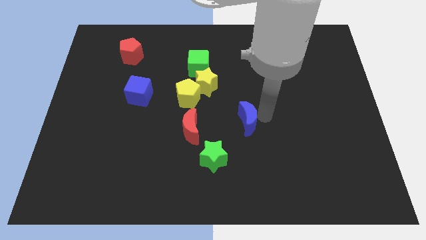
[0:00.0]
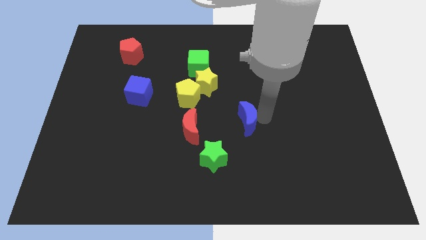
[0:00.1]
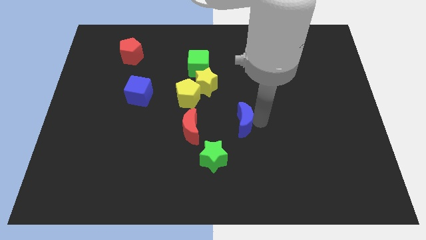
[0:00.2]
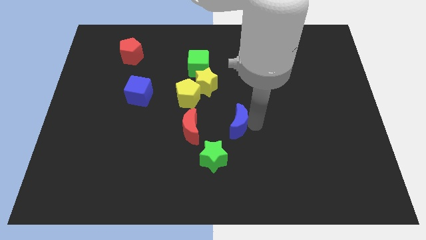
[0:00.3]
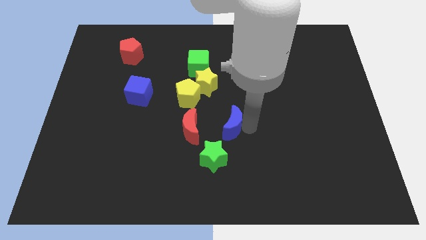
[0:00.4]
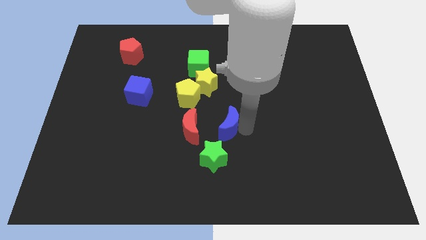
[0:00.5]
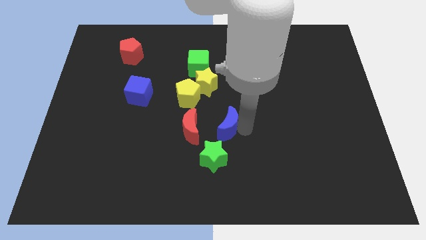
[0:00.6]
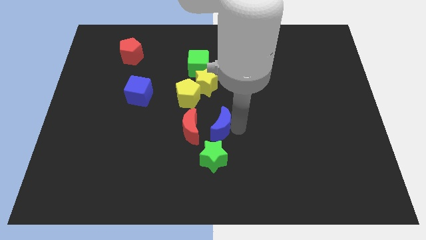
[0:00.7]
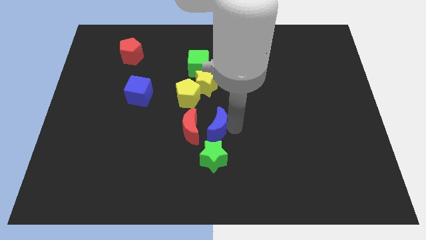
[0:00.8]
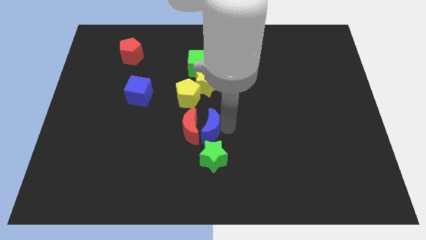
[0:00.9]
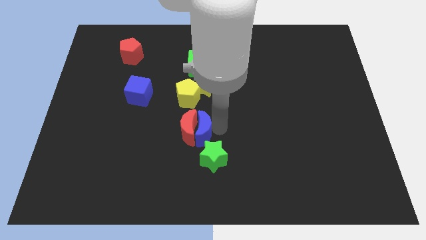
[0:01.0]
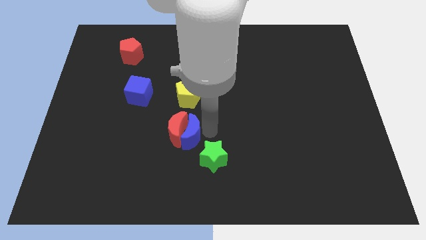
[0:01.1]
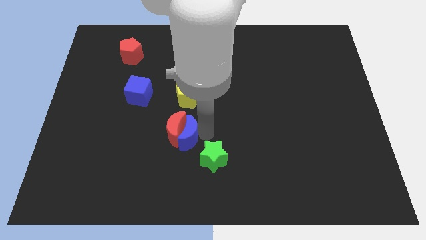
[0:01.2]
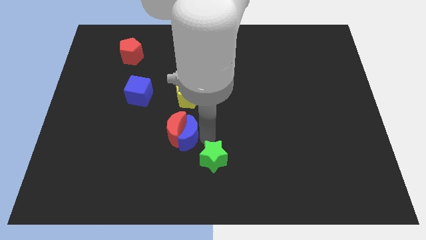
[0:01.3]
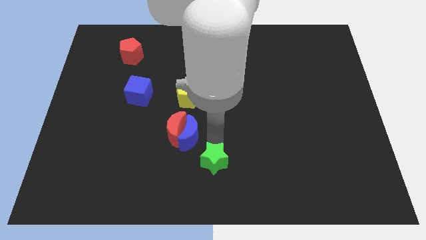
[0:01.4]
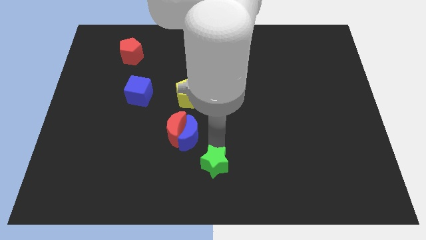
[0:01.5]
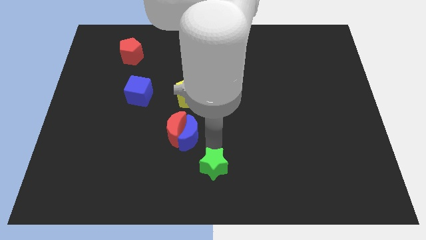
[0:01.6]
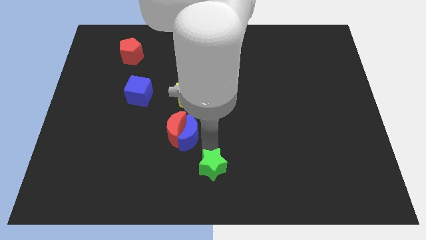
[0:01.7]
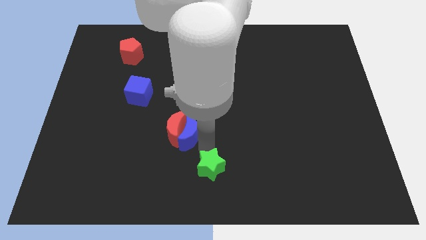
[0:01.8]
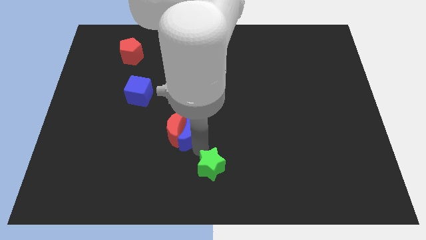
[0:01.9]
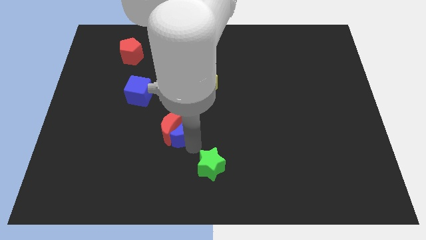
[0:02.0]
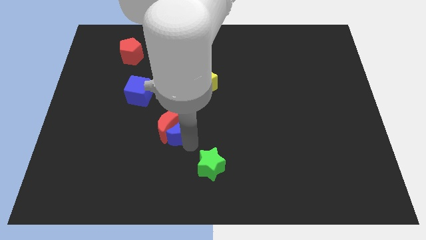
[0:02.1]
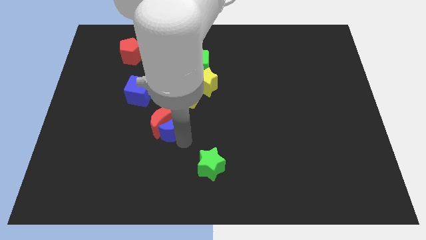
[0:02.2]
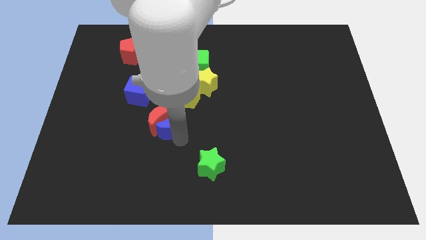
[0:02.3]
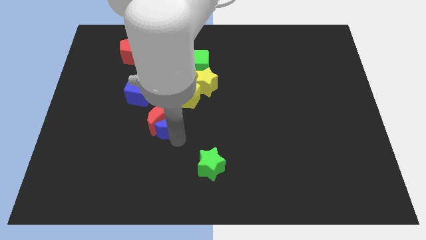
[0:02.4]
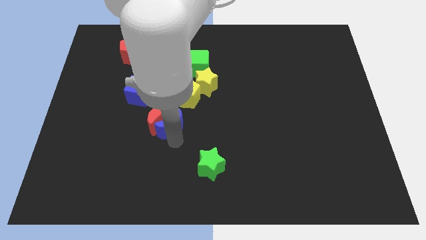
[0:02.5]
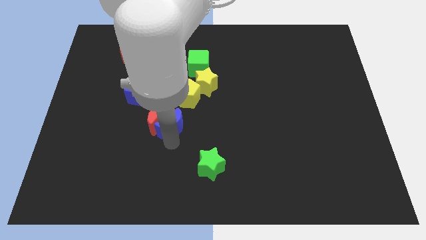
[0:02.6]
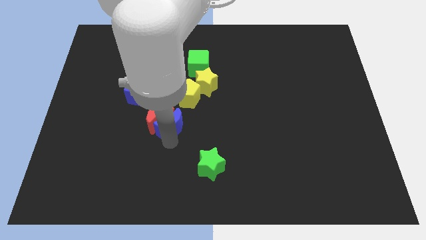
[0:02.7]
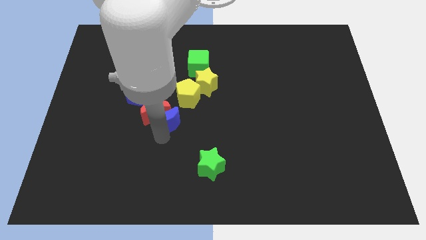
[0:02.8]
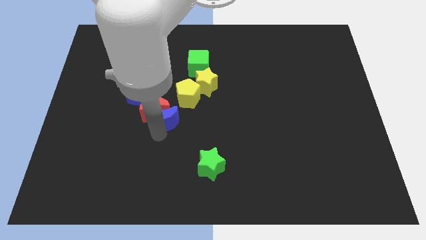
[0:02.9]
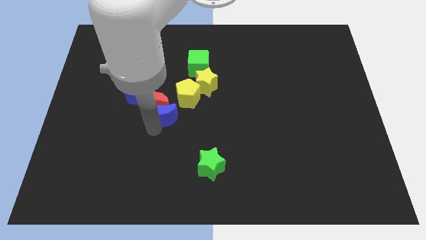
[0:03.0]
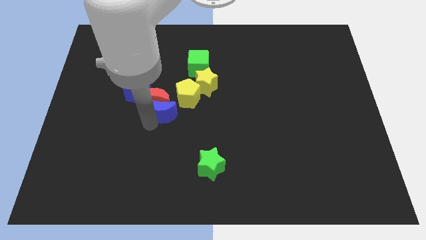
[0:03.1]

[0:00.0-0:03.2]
slightly push the green star towards down

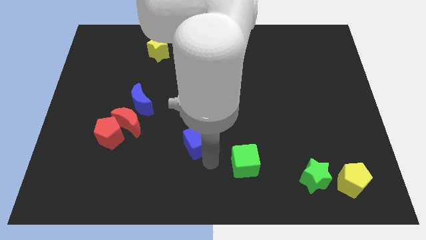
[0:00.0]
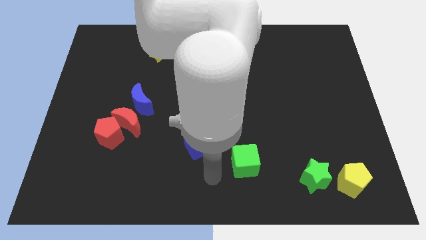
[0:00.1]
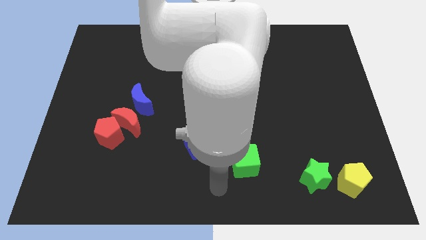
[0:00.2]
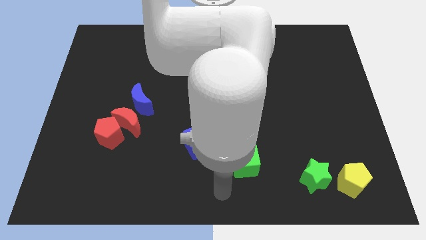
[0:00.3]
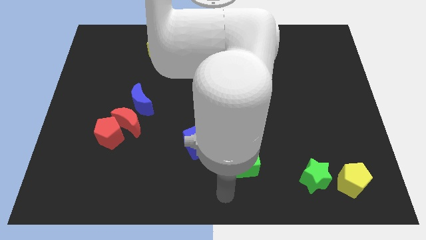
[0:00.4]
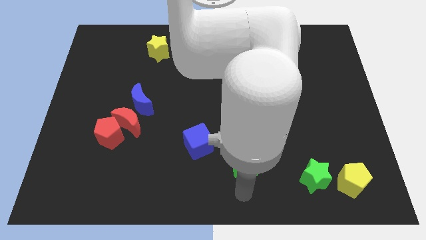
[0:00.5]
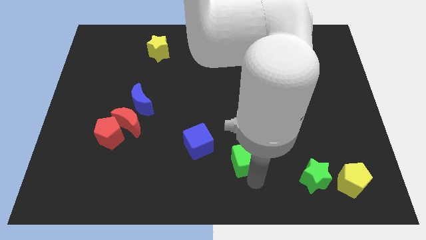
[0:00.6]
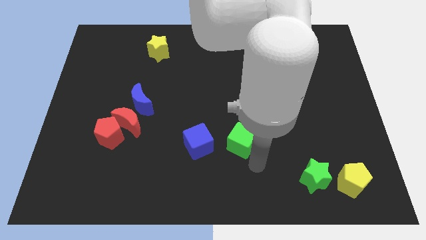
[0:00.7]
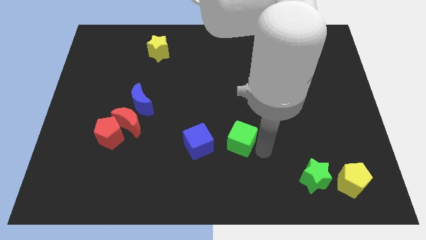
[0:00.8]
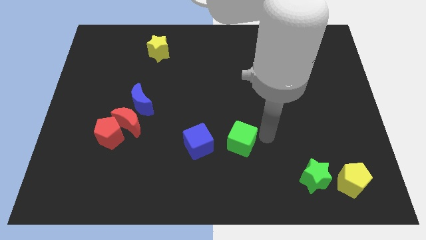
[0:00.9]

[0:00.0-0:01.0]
move green cube upwards

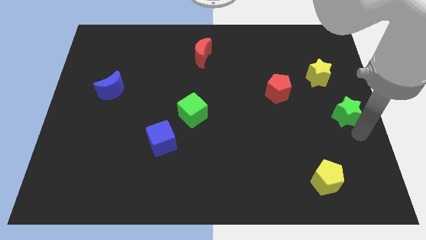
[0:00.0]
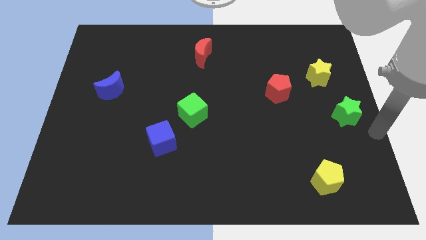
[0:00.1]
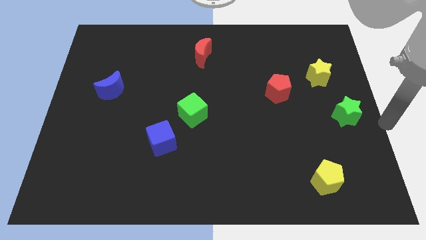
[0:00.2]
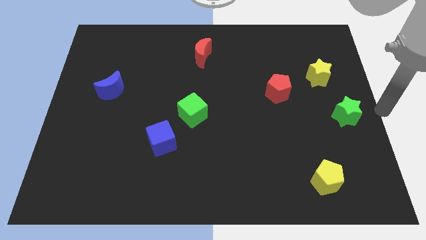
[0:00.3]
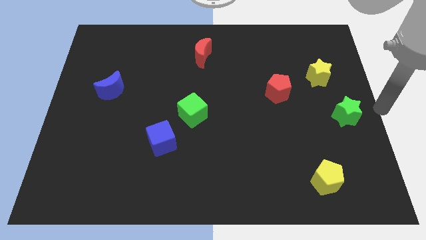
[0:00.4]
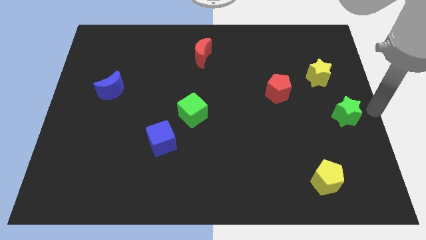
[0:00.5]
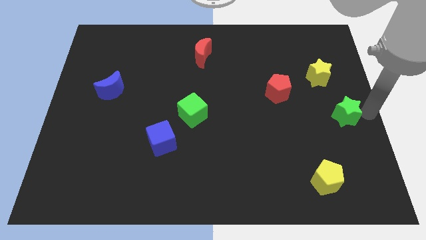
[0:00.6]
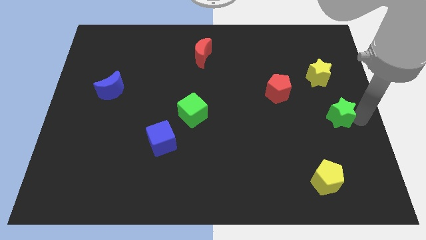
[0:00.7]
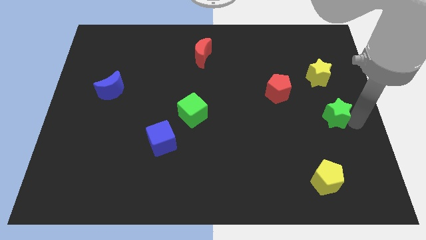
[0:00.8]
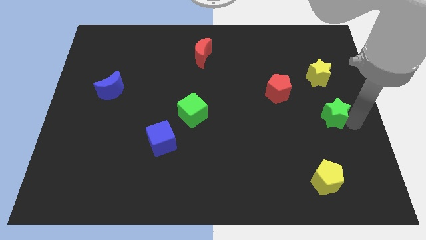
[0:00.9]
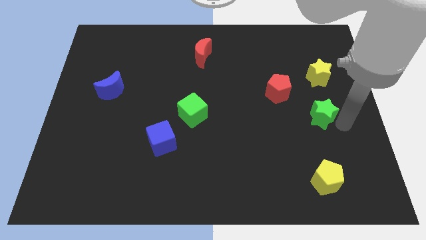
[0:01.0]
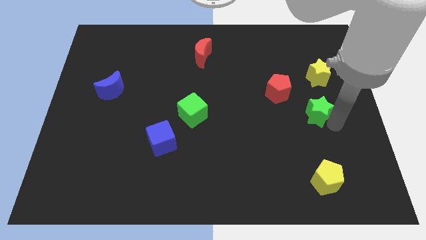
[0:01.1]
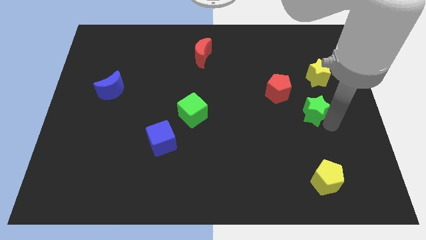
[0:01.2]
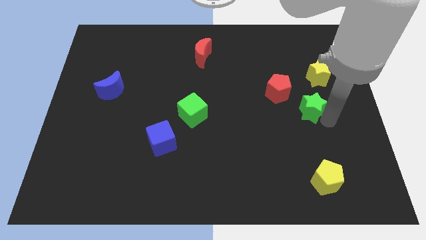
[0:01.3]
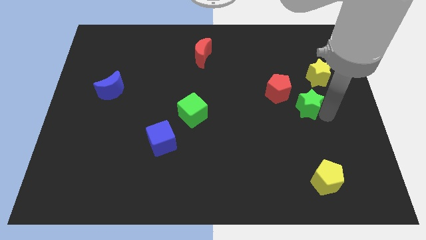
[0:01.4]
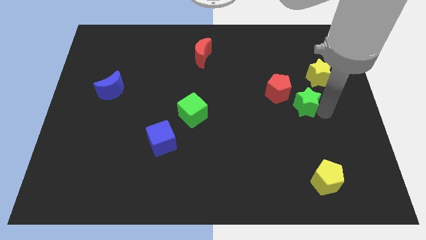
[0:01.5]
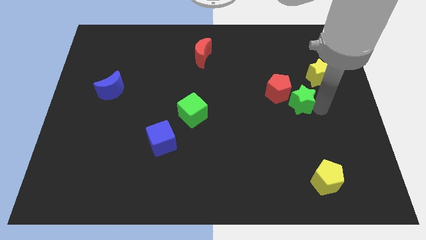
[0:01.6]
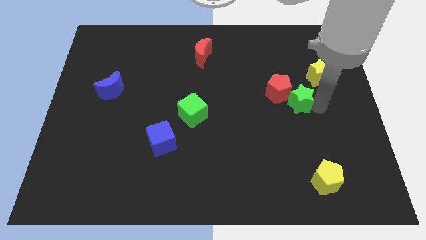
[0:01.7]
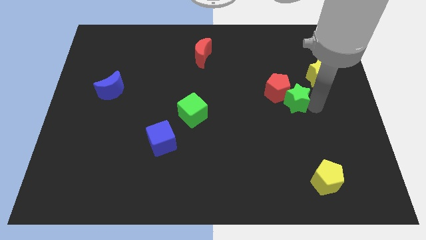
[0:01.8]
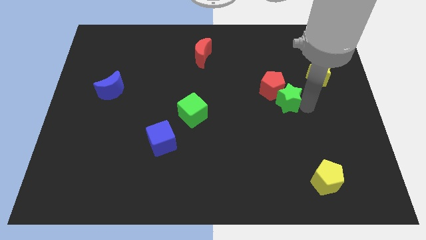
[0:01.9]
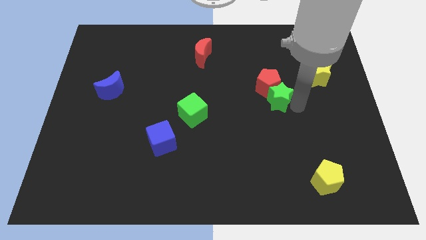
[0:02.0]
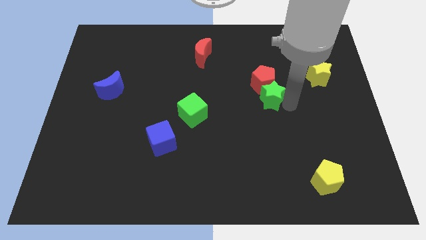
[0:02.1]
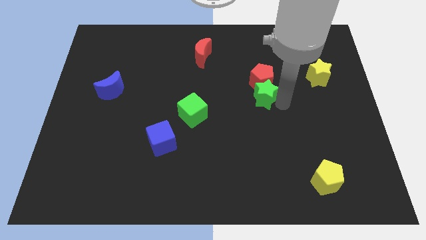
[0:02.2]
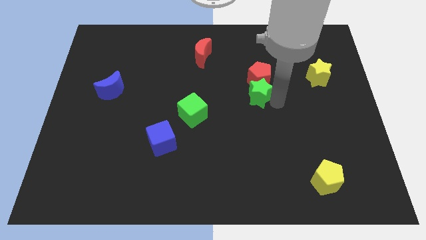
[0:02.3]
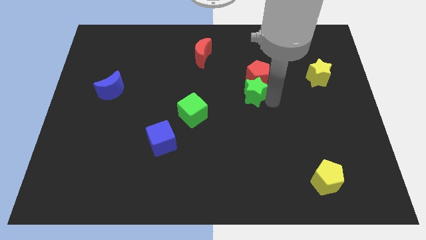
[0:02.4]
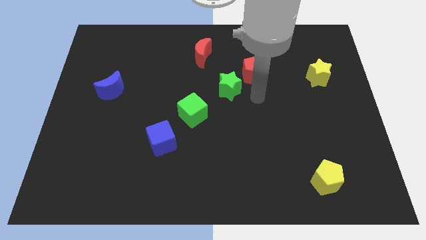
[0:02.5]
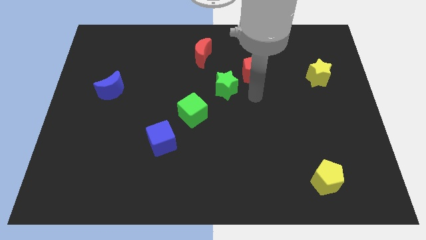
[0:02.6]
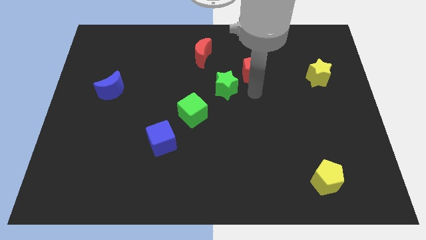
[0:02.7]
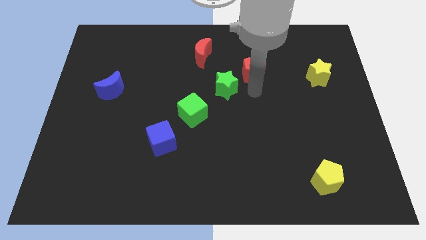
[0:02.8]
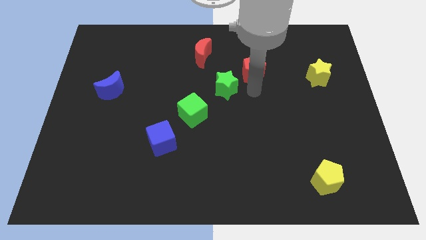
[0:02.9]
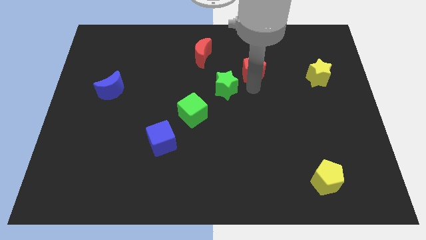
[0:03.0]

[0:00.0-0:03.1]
place the green star in between the green cube and red pentagon

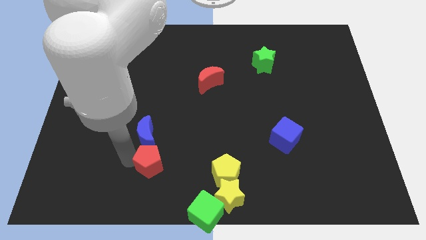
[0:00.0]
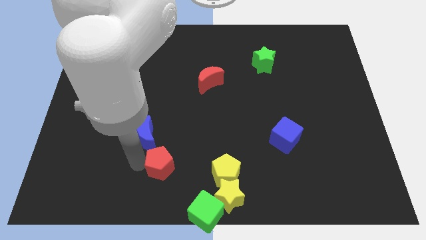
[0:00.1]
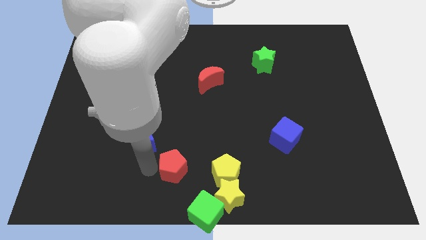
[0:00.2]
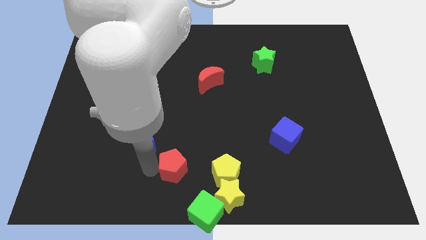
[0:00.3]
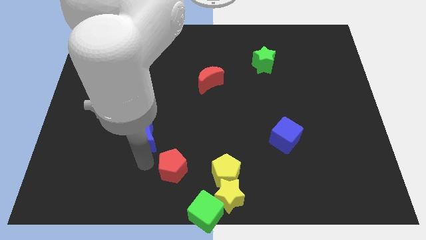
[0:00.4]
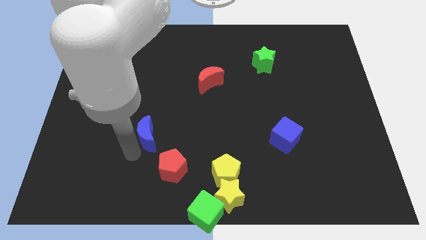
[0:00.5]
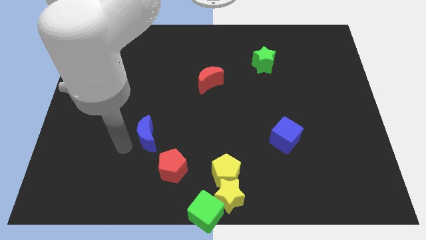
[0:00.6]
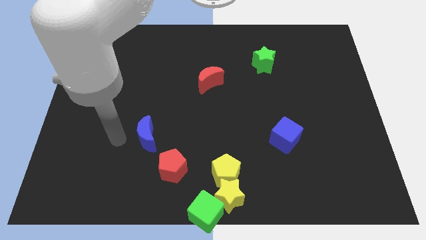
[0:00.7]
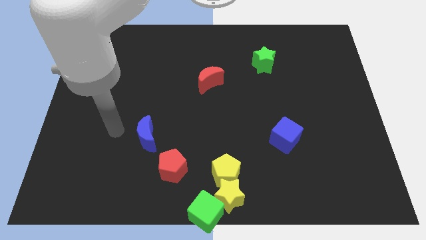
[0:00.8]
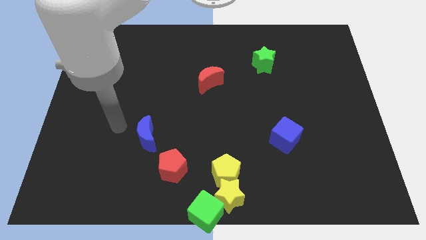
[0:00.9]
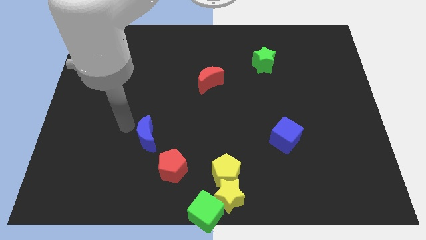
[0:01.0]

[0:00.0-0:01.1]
slightly push the red pentagon to the left of the yellow pentagon

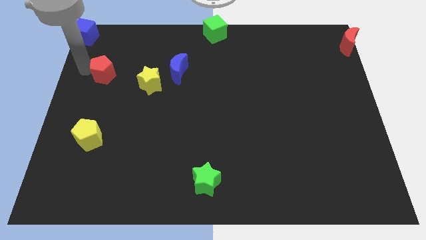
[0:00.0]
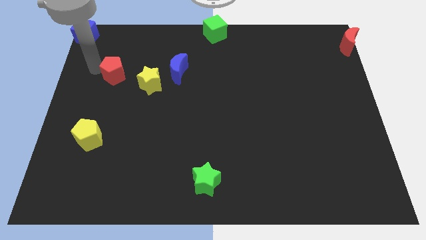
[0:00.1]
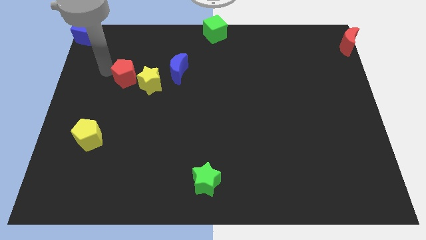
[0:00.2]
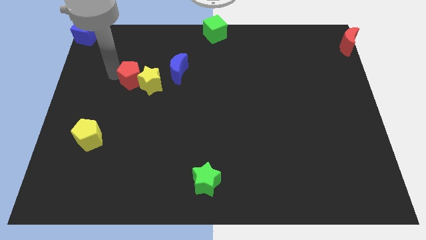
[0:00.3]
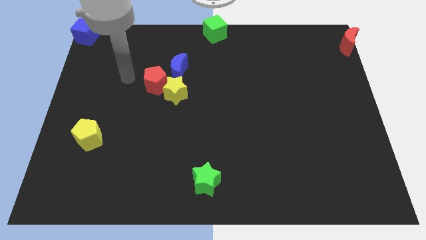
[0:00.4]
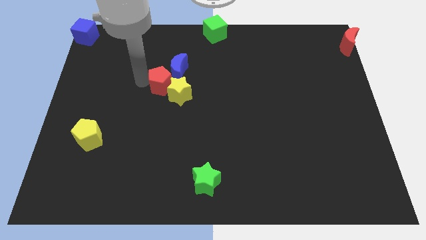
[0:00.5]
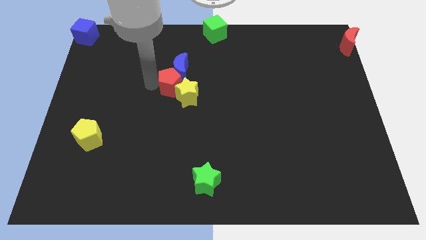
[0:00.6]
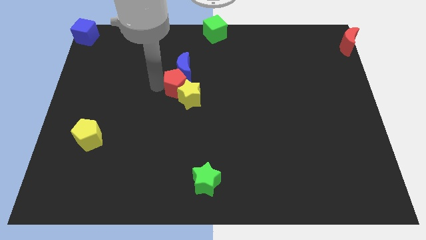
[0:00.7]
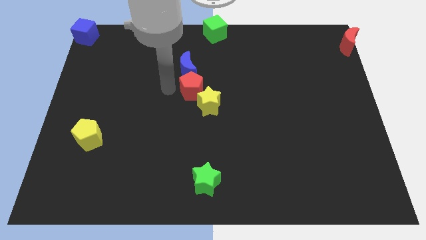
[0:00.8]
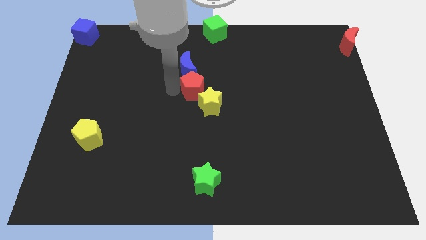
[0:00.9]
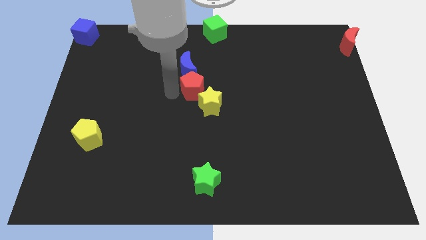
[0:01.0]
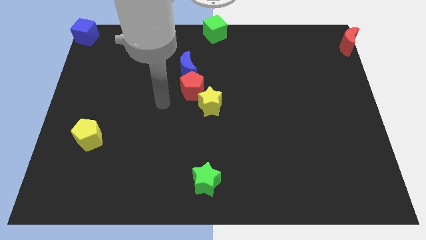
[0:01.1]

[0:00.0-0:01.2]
push the red pentagon towards yellow star at the center
